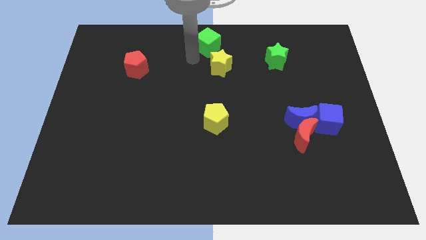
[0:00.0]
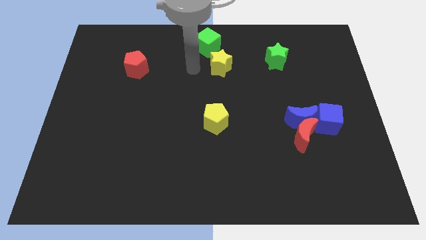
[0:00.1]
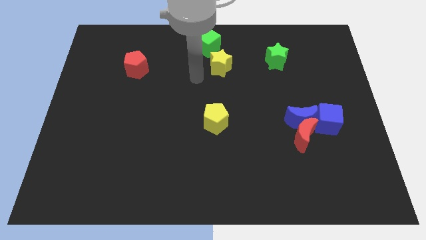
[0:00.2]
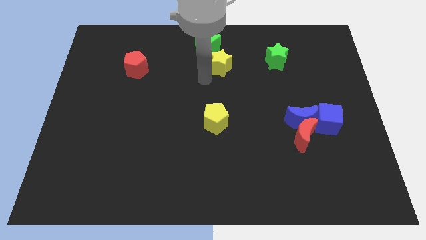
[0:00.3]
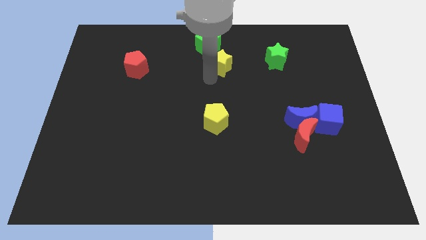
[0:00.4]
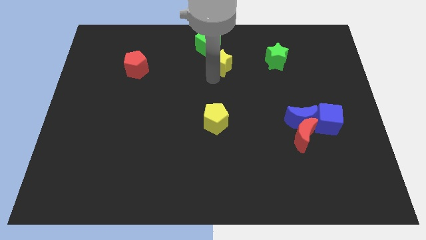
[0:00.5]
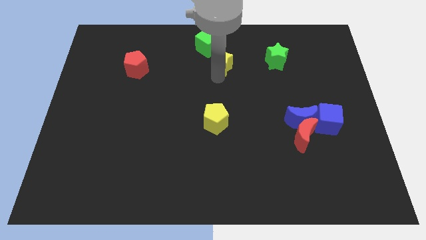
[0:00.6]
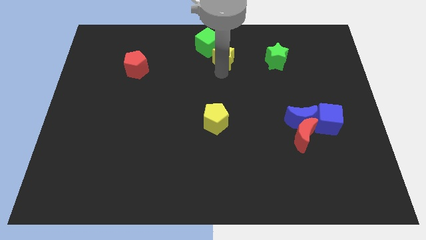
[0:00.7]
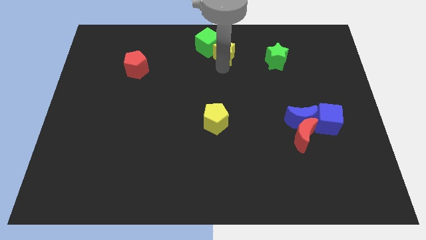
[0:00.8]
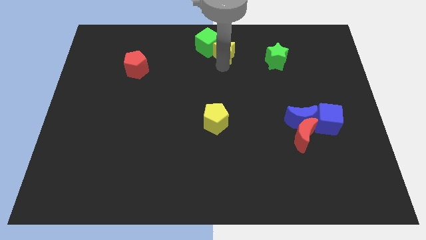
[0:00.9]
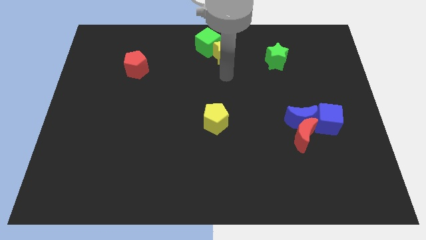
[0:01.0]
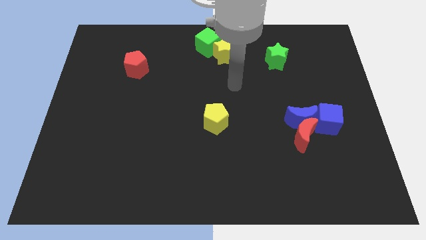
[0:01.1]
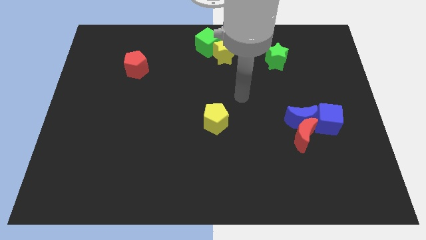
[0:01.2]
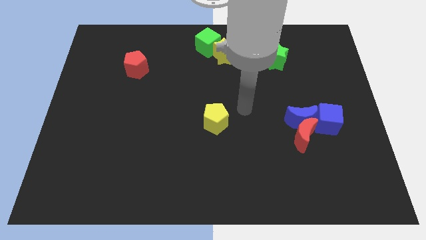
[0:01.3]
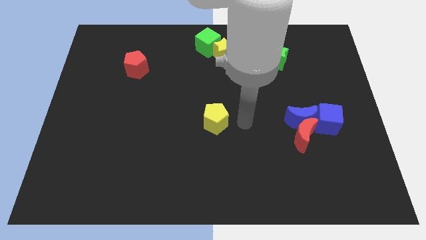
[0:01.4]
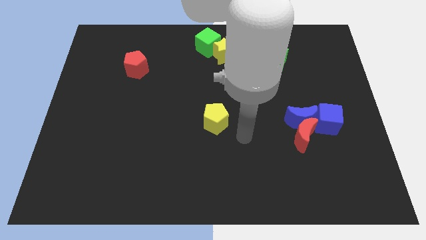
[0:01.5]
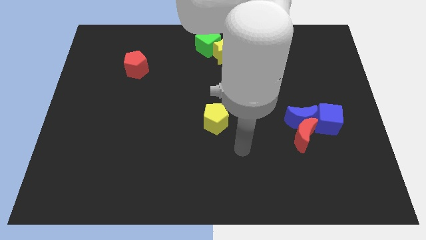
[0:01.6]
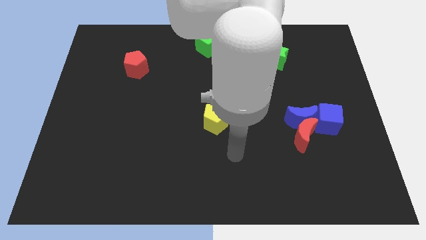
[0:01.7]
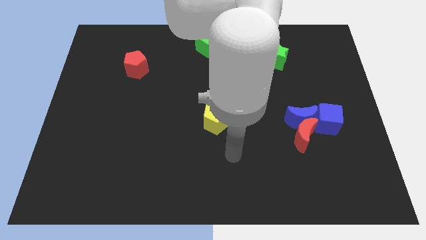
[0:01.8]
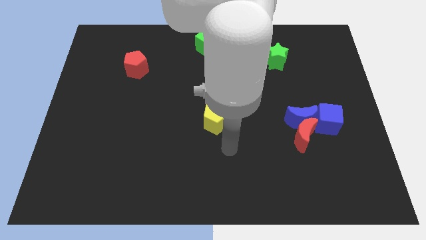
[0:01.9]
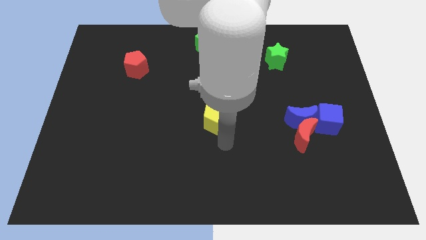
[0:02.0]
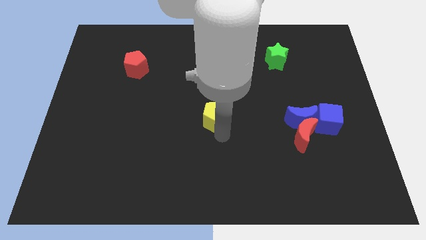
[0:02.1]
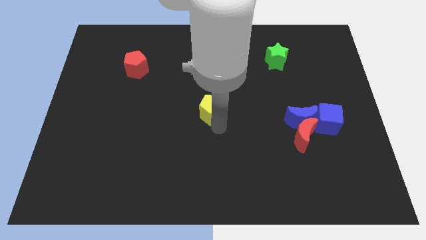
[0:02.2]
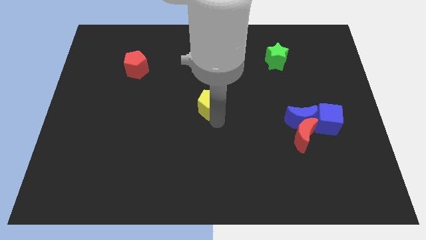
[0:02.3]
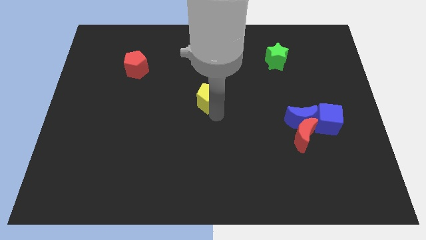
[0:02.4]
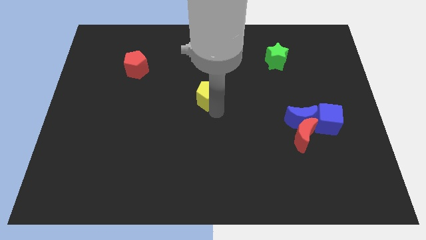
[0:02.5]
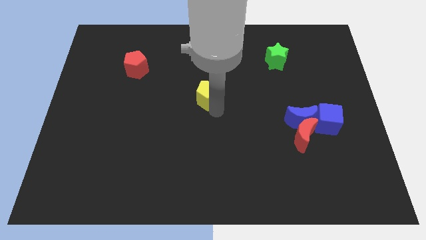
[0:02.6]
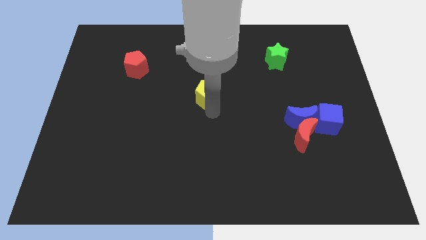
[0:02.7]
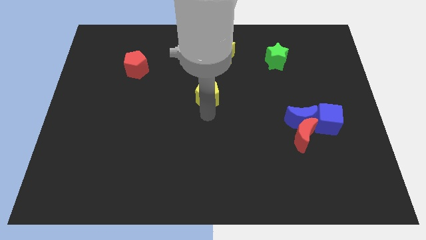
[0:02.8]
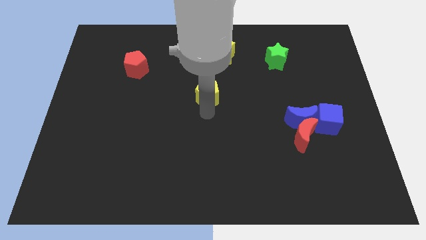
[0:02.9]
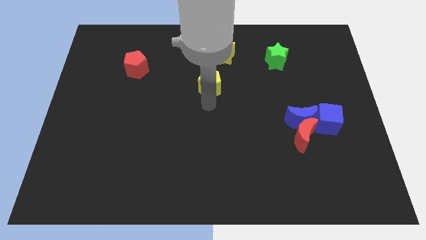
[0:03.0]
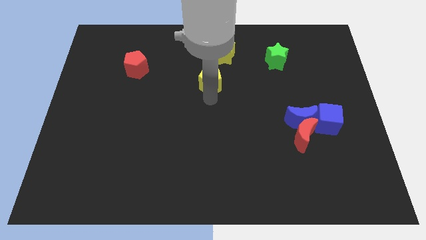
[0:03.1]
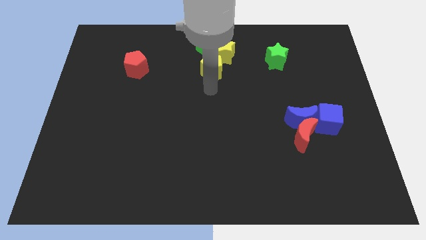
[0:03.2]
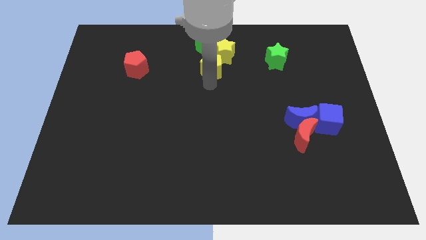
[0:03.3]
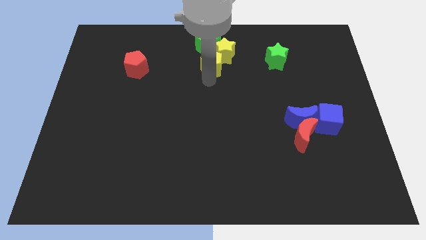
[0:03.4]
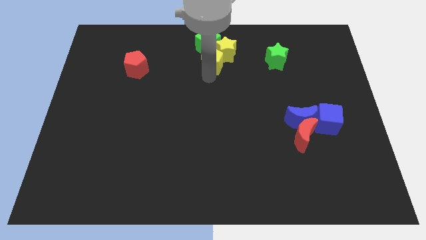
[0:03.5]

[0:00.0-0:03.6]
place the yellow star towards the bottom right side of the green cube

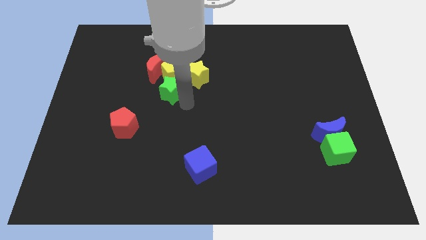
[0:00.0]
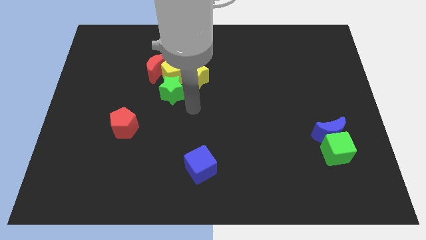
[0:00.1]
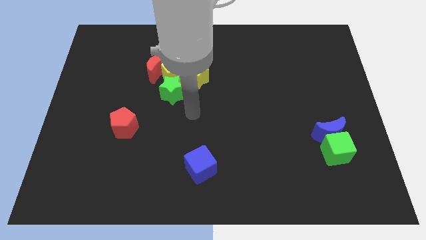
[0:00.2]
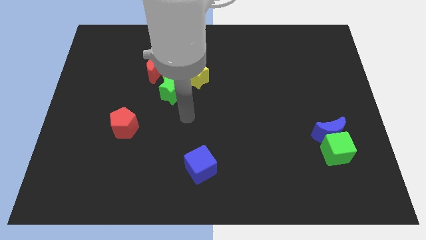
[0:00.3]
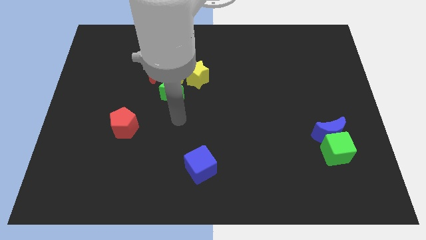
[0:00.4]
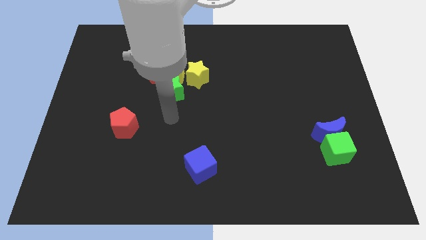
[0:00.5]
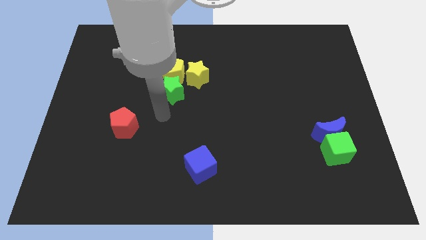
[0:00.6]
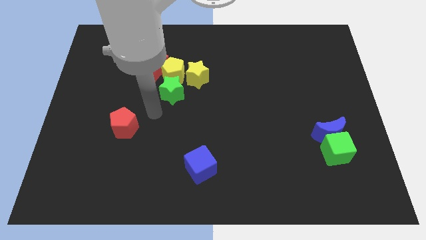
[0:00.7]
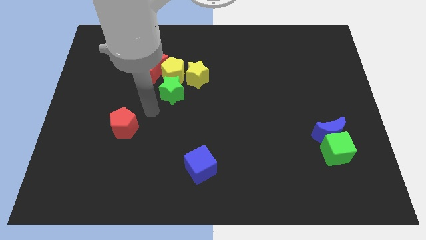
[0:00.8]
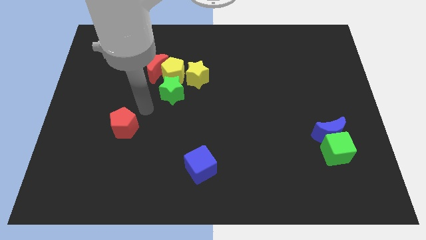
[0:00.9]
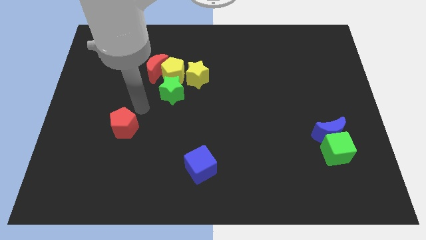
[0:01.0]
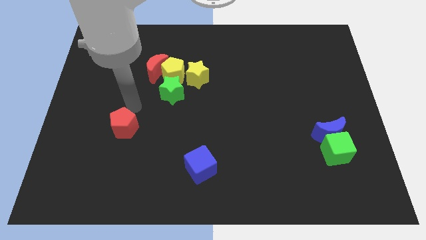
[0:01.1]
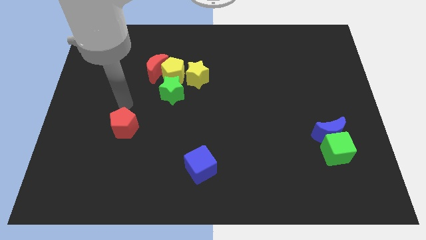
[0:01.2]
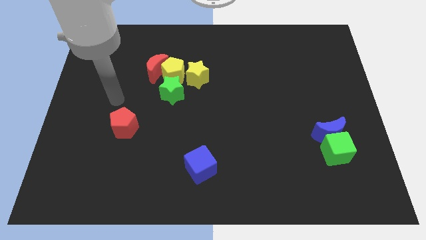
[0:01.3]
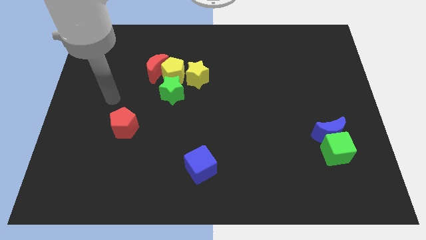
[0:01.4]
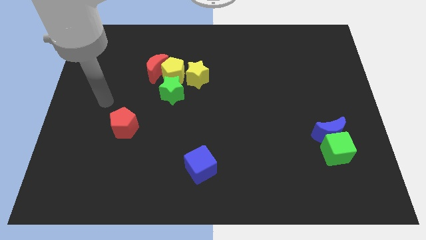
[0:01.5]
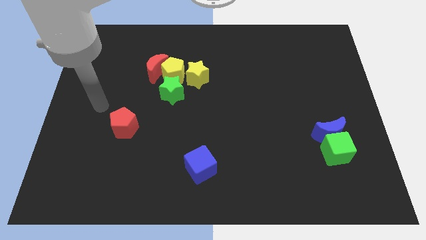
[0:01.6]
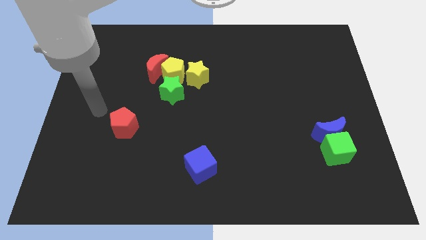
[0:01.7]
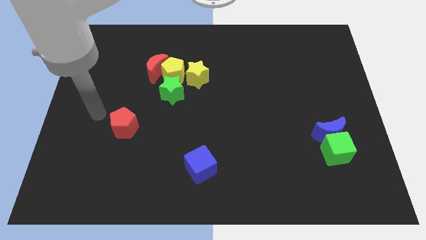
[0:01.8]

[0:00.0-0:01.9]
move your arm away from the green star

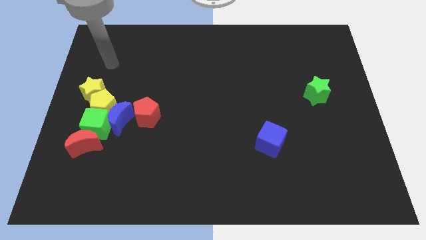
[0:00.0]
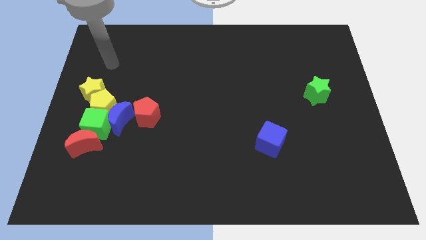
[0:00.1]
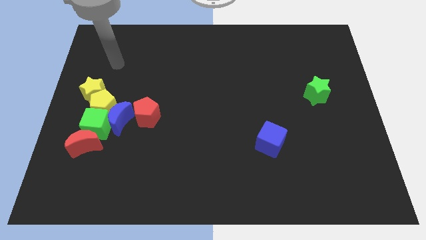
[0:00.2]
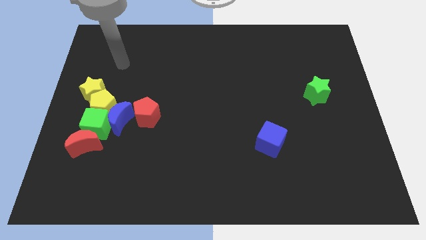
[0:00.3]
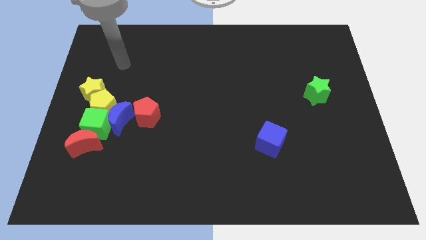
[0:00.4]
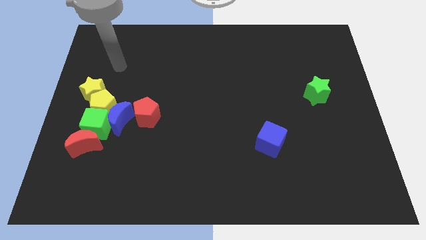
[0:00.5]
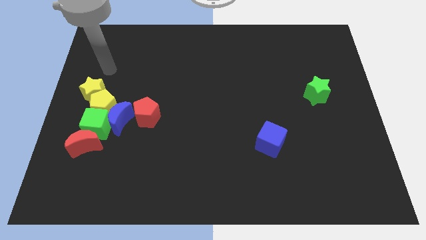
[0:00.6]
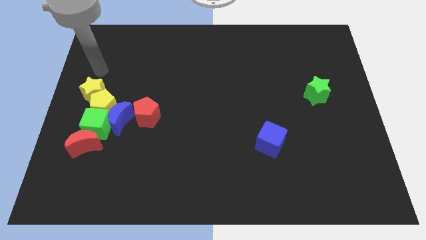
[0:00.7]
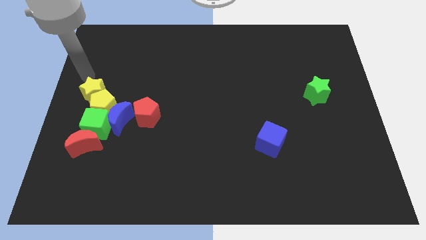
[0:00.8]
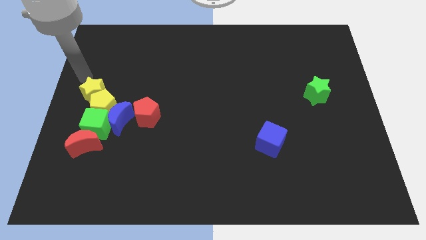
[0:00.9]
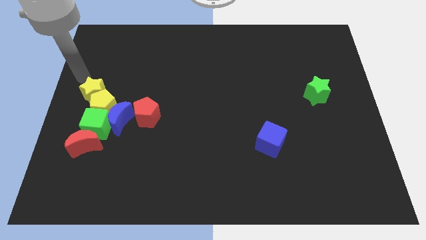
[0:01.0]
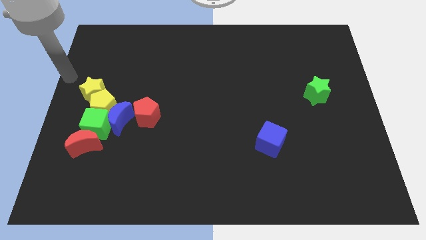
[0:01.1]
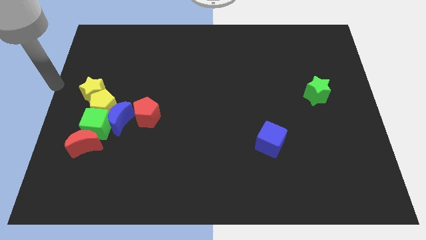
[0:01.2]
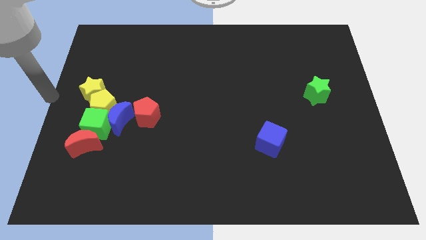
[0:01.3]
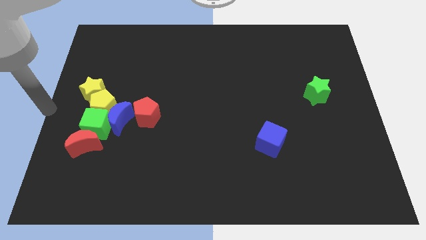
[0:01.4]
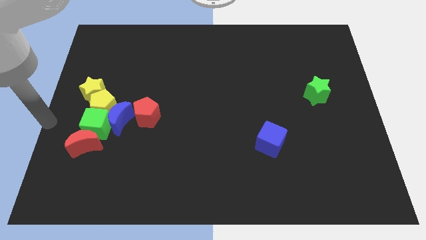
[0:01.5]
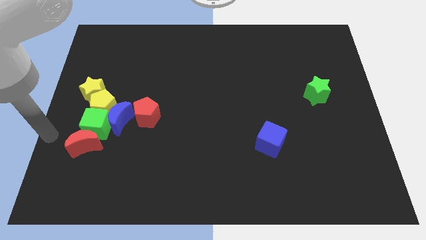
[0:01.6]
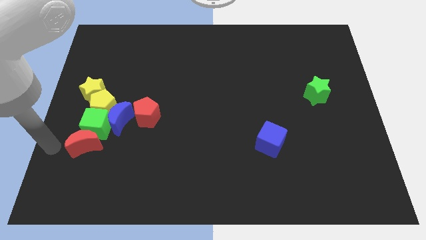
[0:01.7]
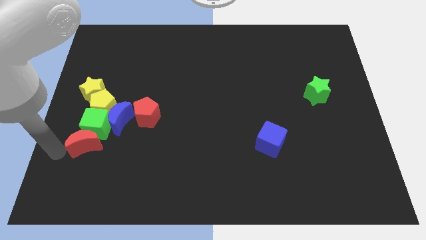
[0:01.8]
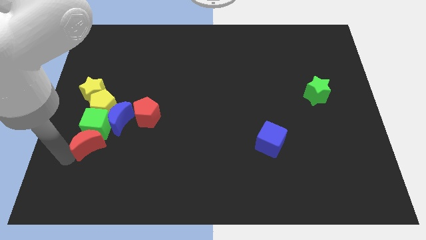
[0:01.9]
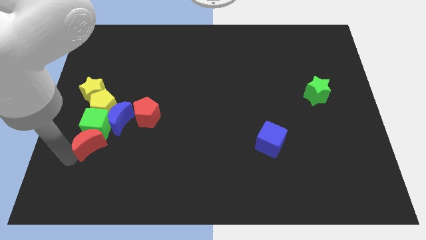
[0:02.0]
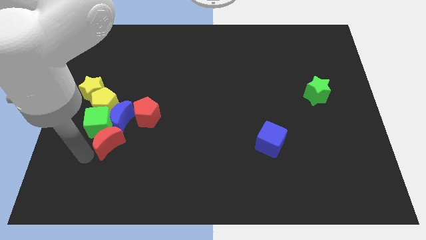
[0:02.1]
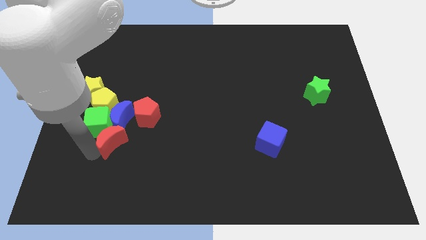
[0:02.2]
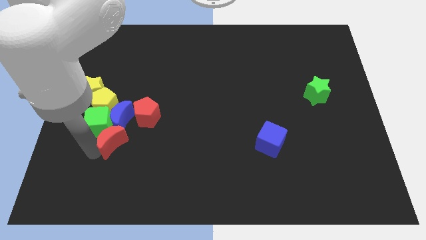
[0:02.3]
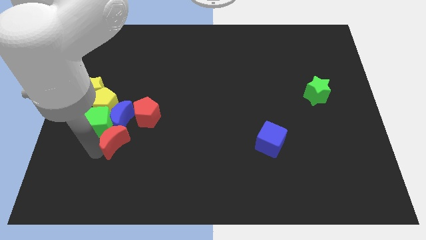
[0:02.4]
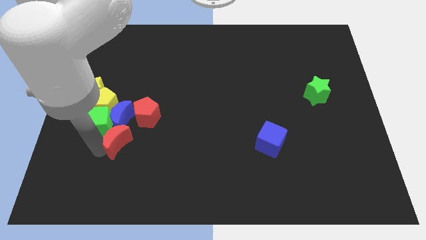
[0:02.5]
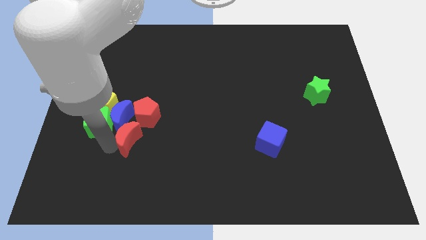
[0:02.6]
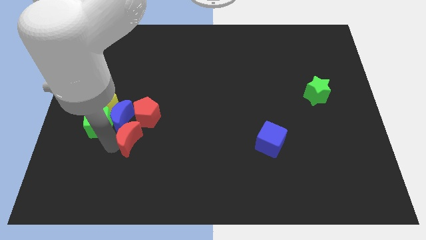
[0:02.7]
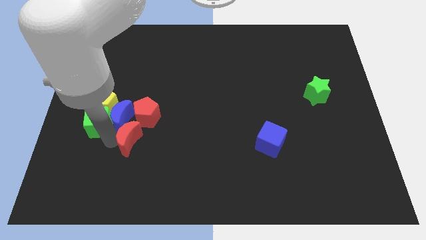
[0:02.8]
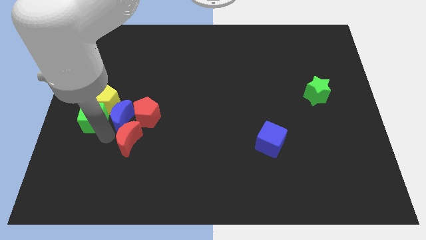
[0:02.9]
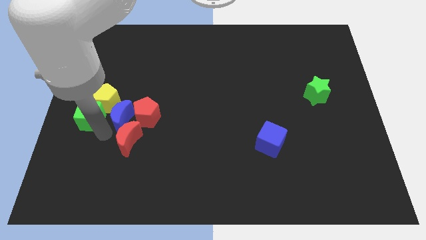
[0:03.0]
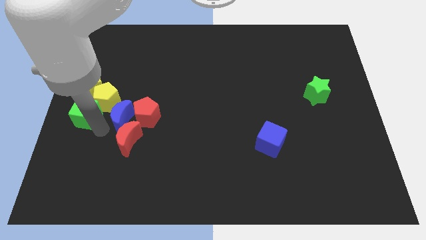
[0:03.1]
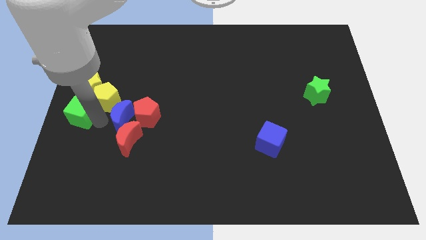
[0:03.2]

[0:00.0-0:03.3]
place the red moon diagonally bottom right to the blue moon
